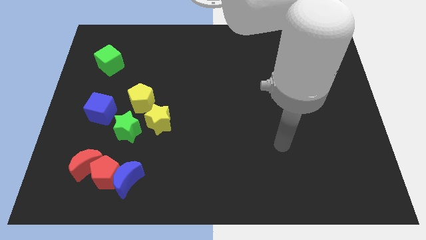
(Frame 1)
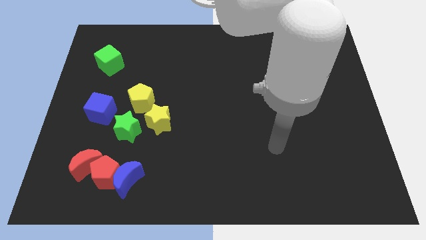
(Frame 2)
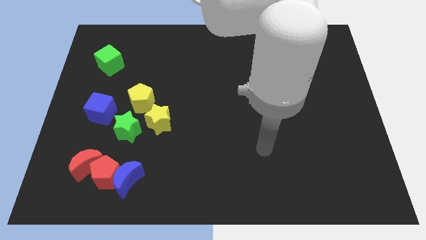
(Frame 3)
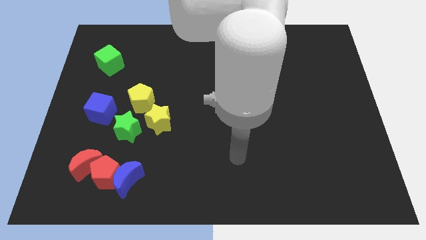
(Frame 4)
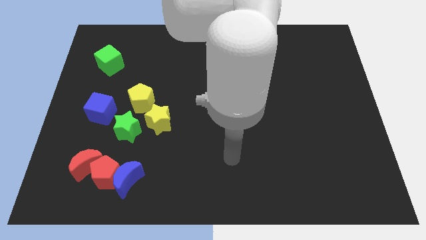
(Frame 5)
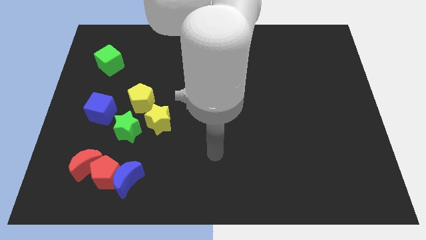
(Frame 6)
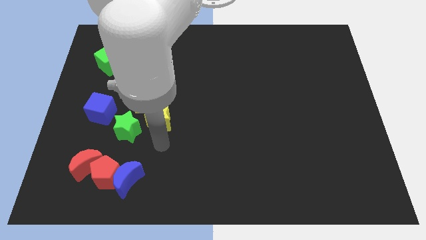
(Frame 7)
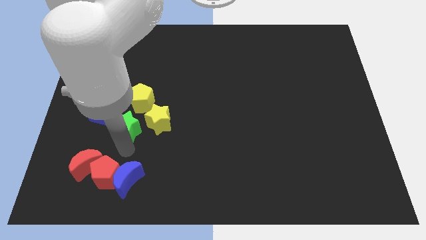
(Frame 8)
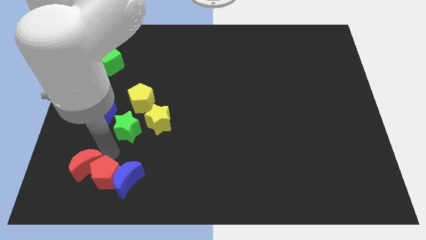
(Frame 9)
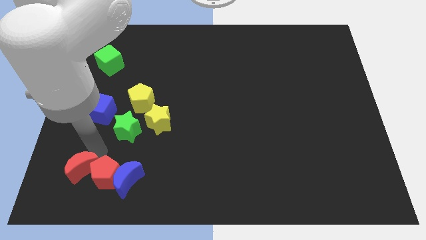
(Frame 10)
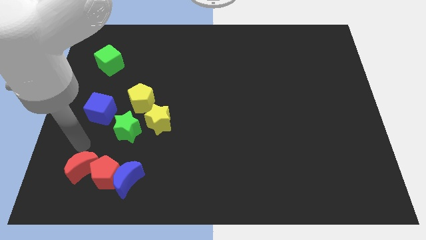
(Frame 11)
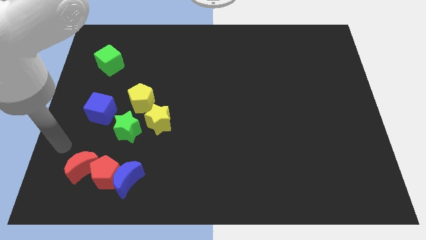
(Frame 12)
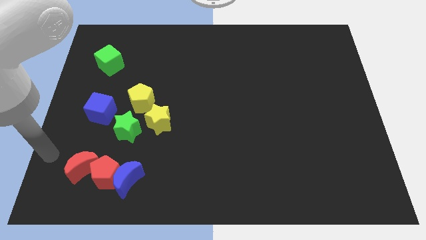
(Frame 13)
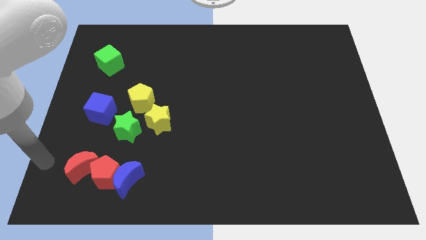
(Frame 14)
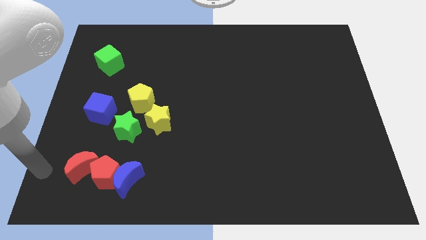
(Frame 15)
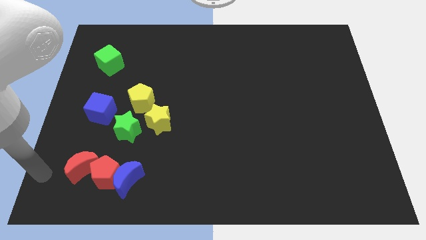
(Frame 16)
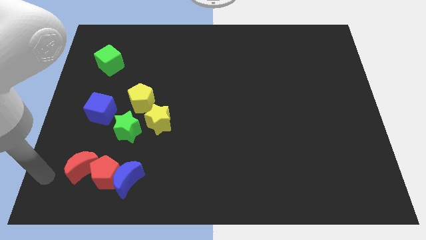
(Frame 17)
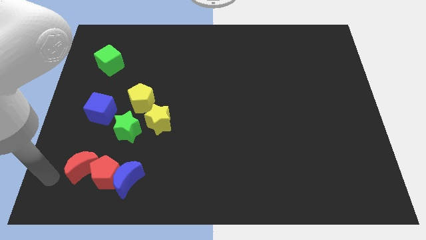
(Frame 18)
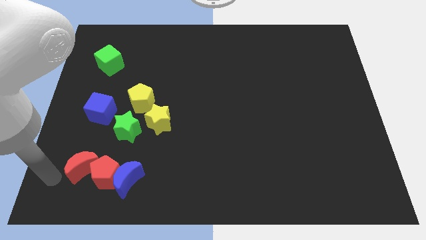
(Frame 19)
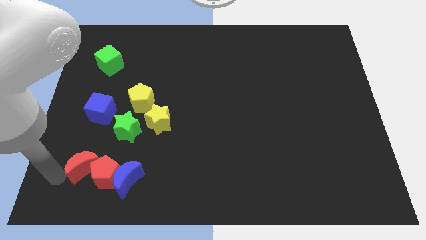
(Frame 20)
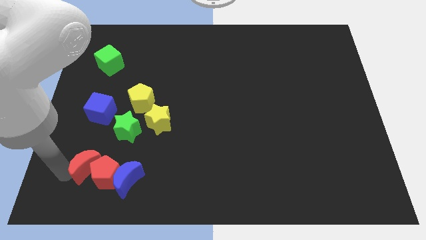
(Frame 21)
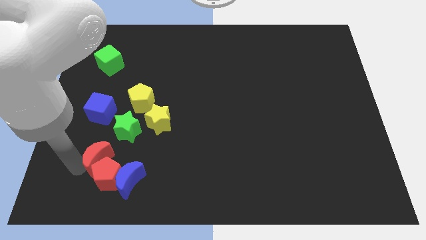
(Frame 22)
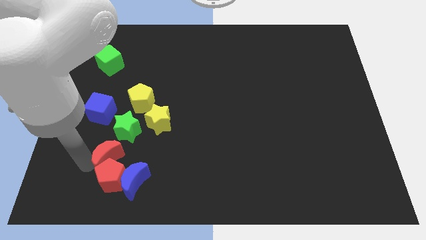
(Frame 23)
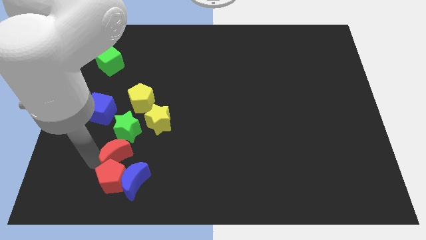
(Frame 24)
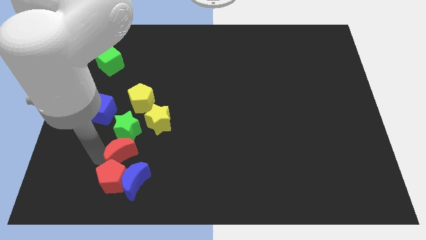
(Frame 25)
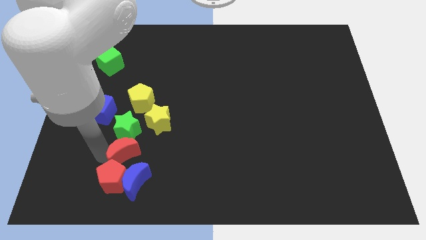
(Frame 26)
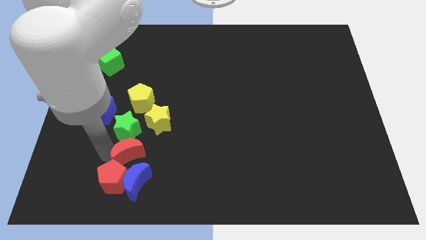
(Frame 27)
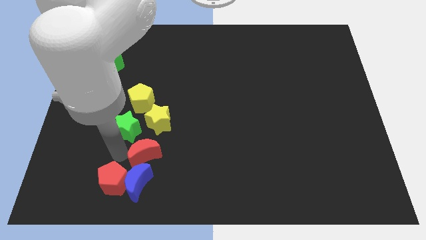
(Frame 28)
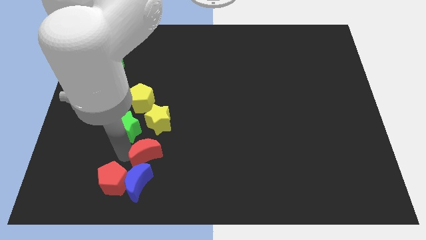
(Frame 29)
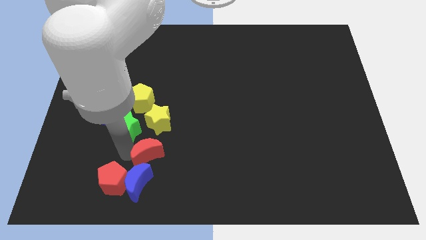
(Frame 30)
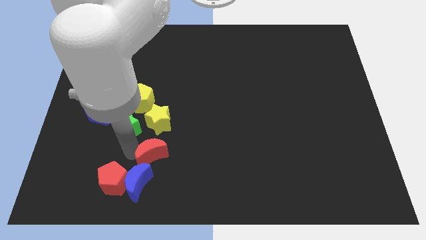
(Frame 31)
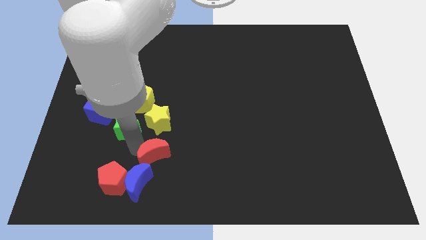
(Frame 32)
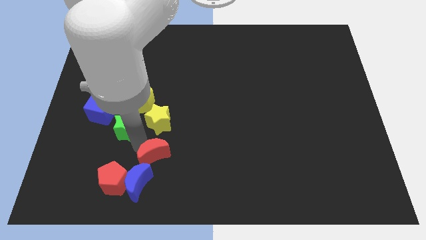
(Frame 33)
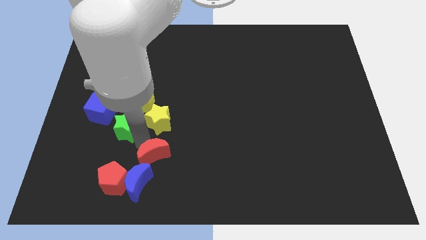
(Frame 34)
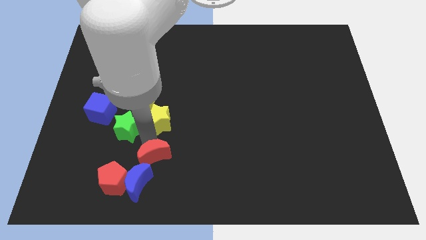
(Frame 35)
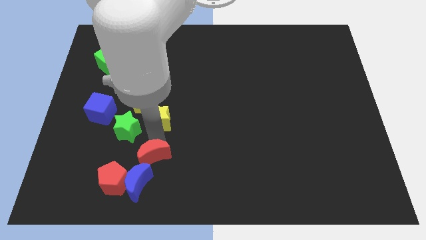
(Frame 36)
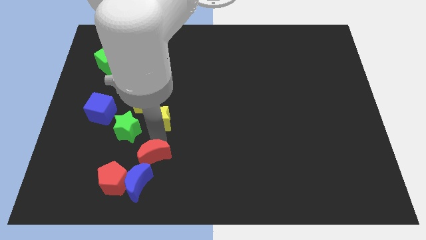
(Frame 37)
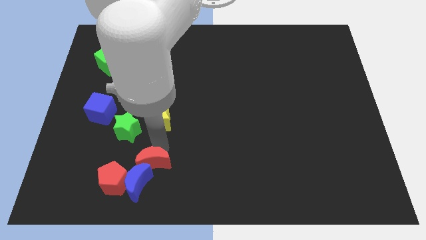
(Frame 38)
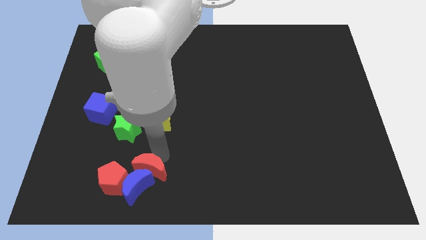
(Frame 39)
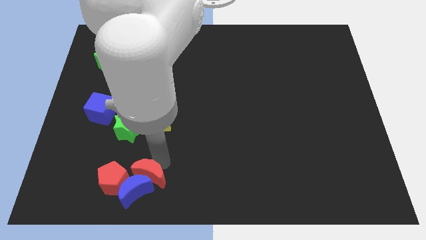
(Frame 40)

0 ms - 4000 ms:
push the red moon next to the blue moon

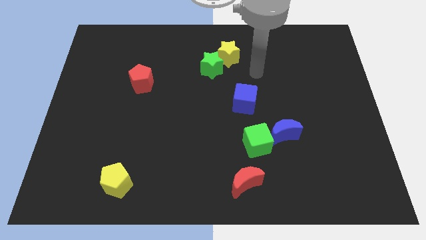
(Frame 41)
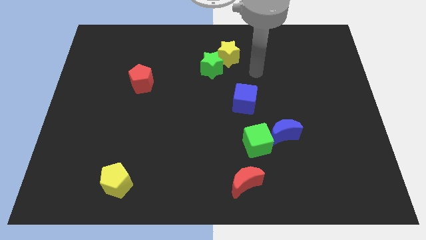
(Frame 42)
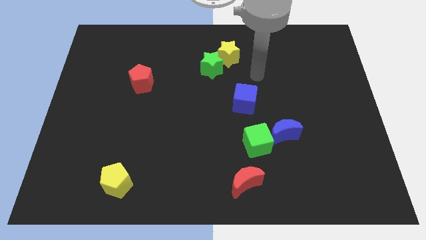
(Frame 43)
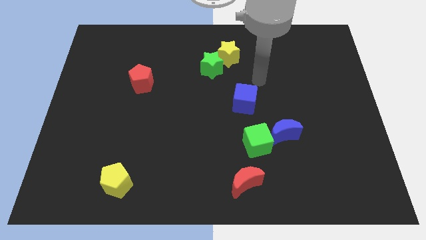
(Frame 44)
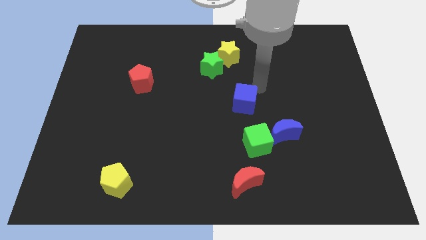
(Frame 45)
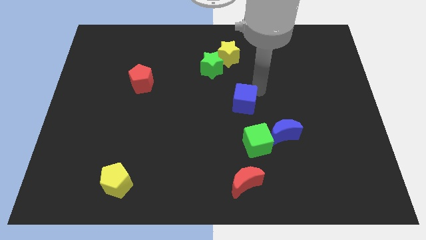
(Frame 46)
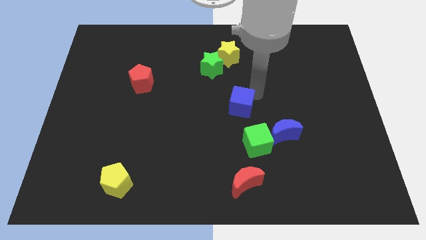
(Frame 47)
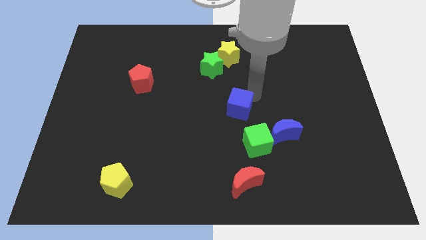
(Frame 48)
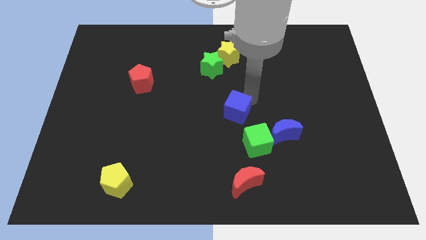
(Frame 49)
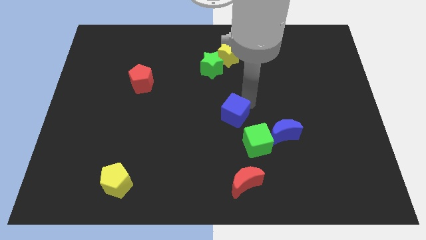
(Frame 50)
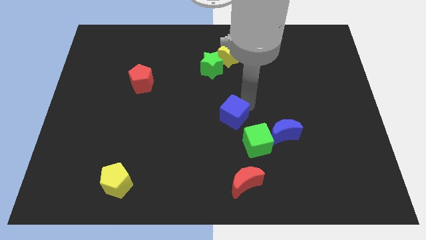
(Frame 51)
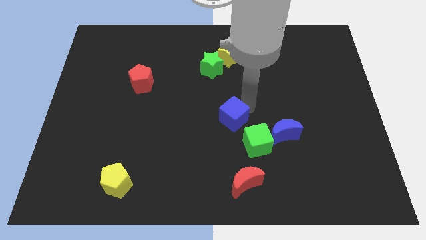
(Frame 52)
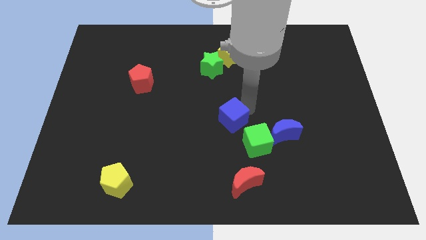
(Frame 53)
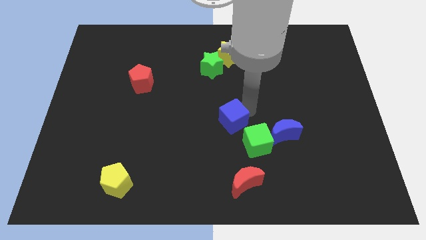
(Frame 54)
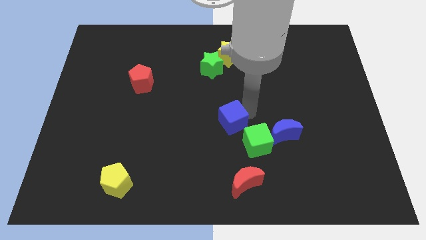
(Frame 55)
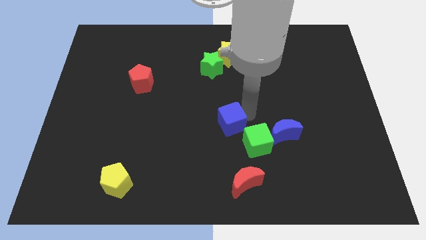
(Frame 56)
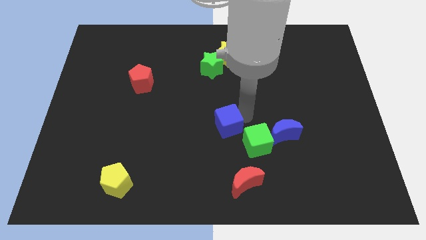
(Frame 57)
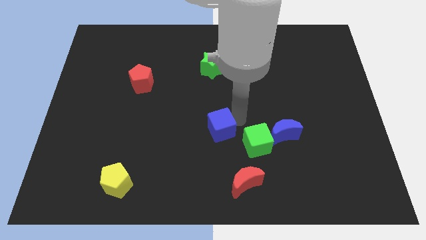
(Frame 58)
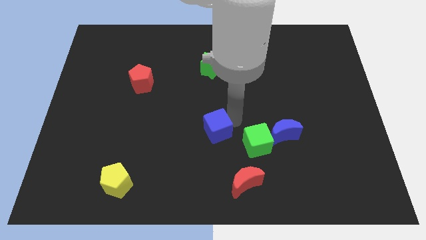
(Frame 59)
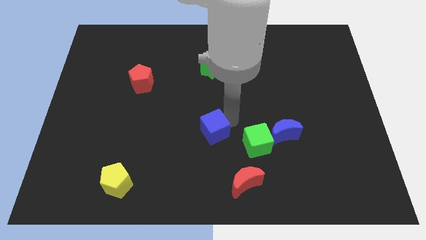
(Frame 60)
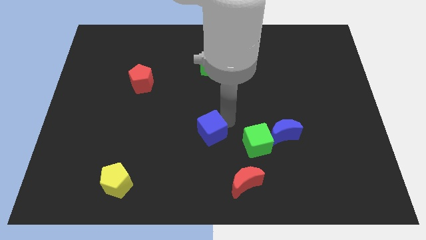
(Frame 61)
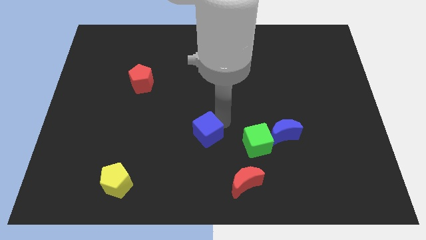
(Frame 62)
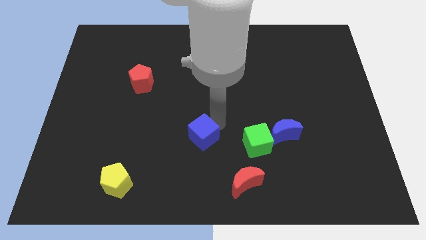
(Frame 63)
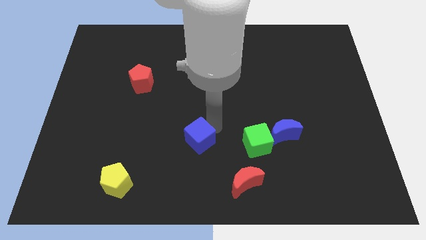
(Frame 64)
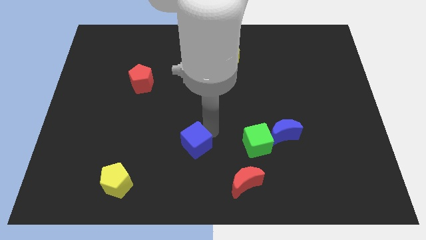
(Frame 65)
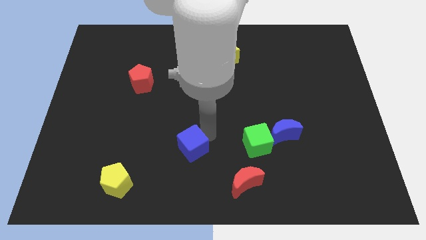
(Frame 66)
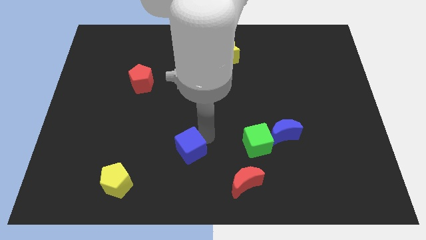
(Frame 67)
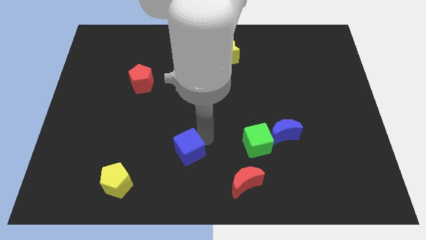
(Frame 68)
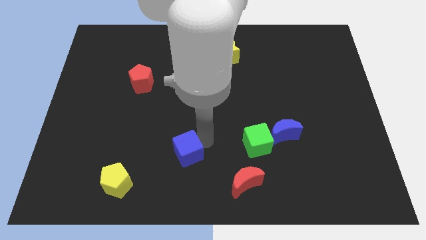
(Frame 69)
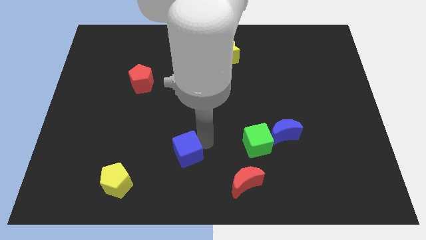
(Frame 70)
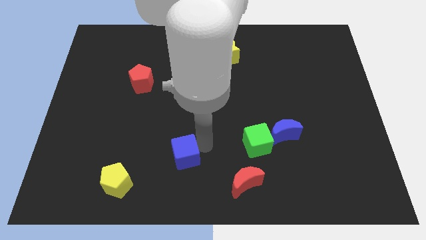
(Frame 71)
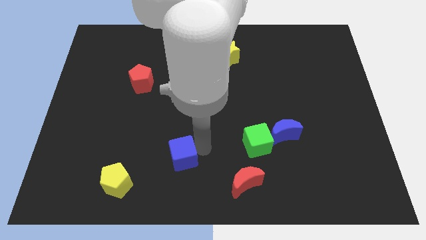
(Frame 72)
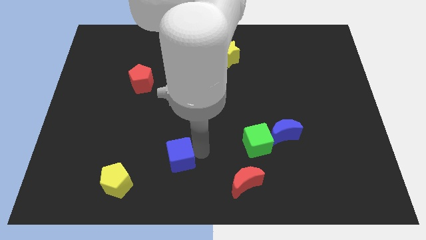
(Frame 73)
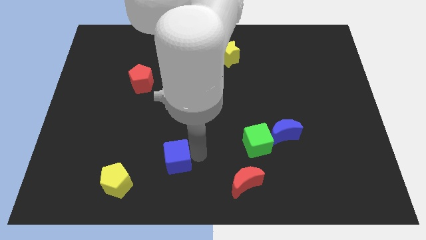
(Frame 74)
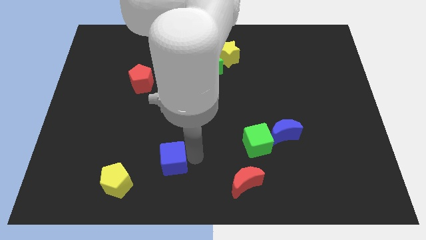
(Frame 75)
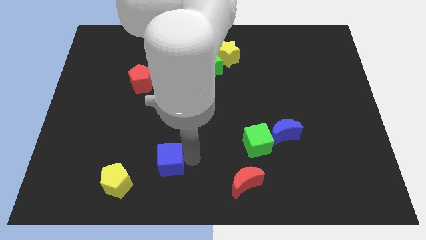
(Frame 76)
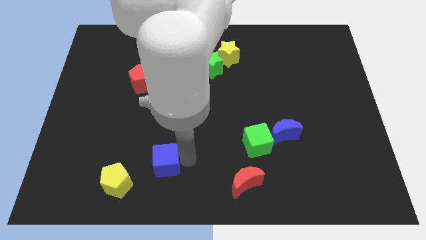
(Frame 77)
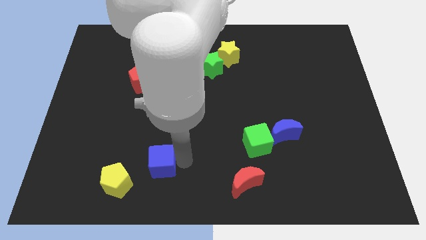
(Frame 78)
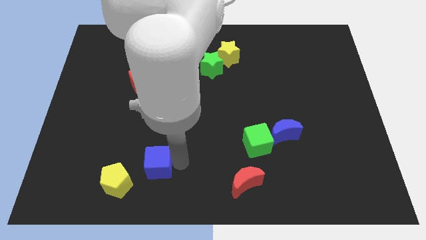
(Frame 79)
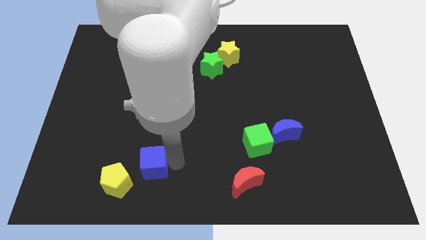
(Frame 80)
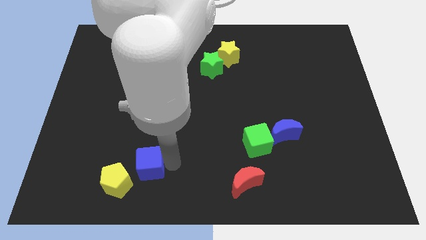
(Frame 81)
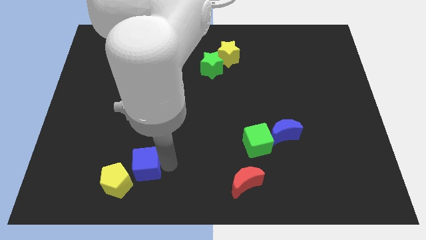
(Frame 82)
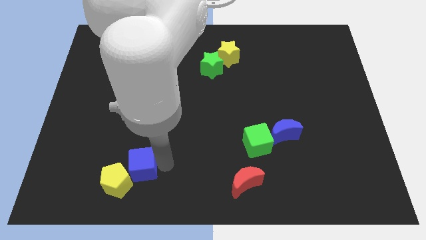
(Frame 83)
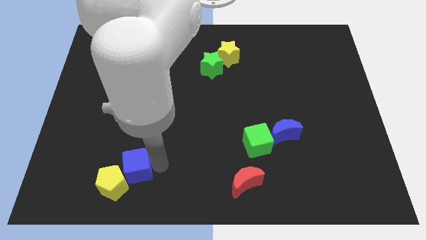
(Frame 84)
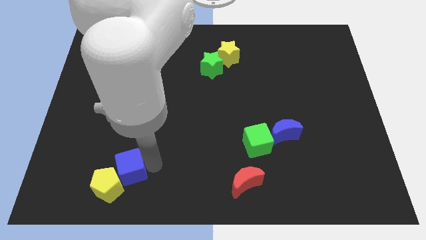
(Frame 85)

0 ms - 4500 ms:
slide the blue cube close to the yellow pentagon
